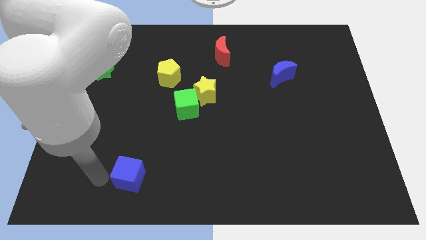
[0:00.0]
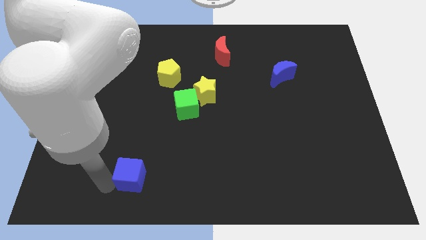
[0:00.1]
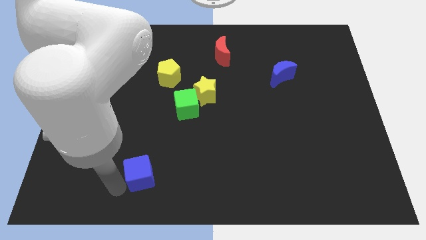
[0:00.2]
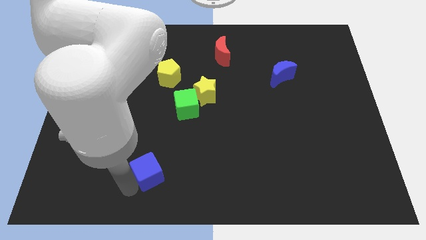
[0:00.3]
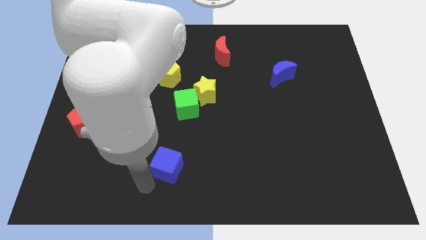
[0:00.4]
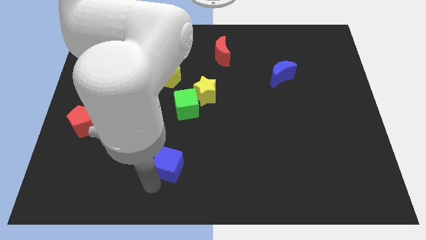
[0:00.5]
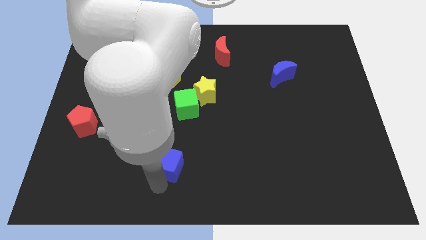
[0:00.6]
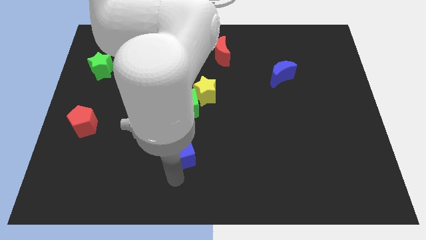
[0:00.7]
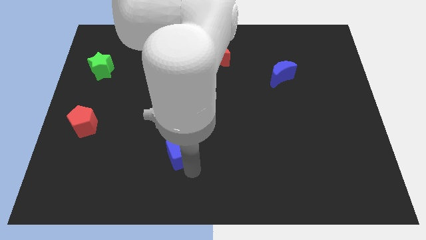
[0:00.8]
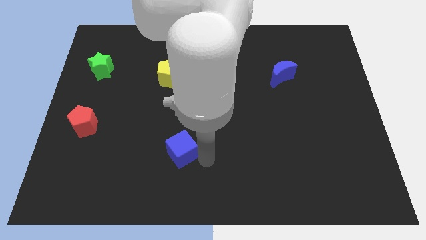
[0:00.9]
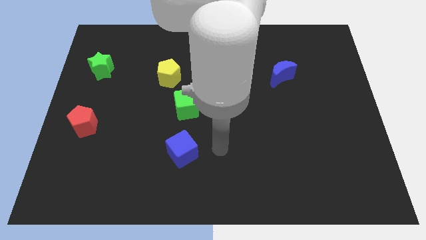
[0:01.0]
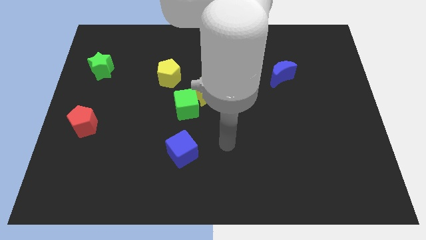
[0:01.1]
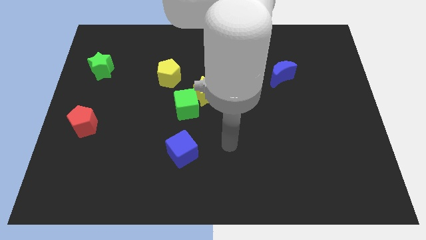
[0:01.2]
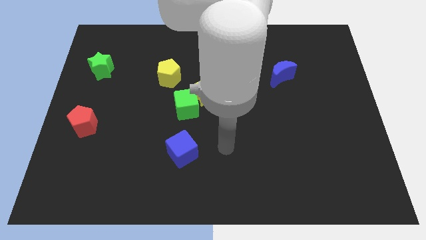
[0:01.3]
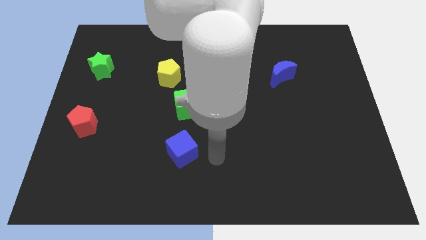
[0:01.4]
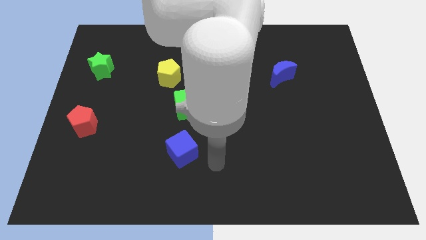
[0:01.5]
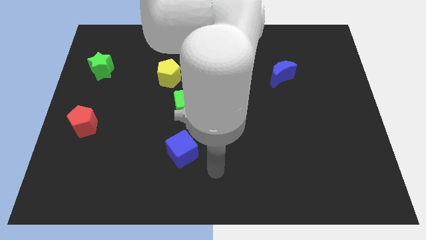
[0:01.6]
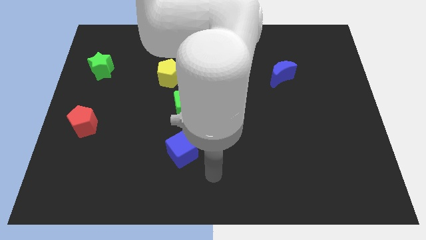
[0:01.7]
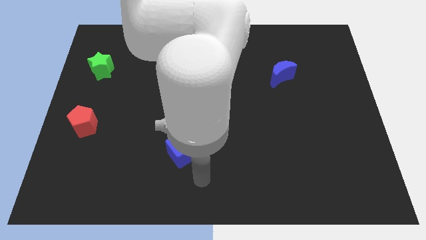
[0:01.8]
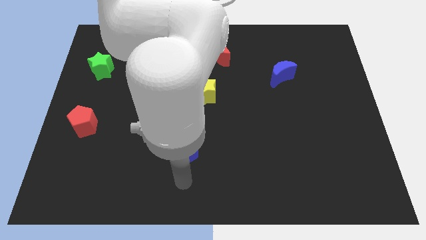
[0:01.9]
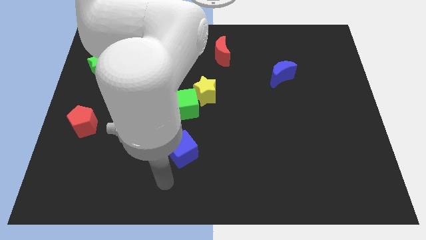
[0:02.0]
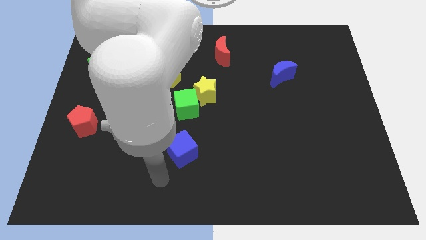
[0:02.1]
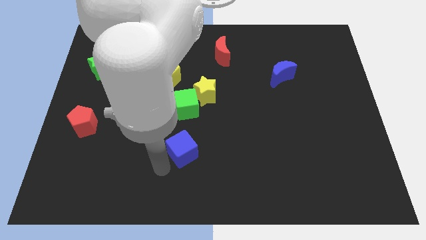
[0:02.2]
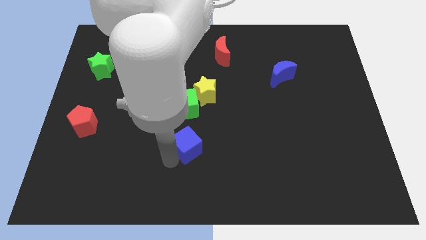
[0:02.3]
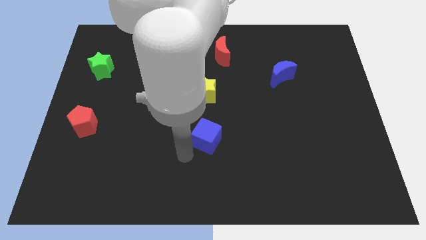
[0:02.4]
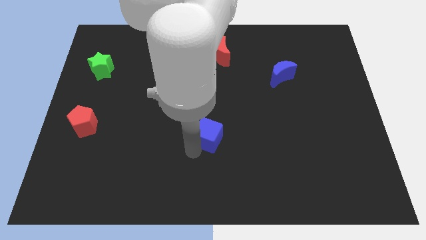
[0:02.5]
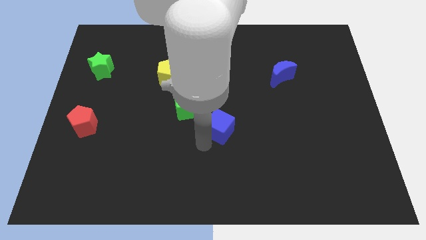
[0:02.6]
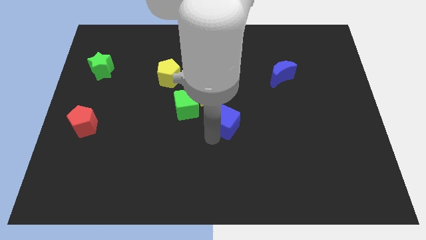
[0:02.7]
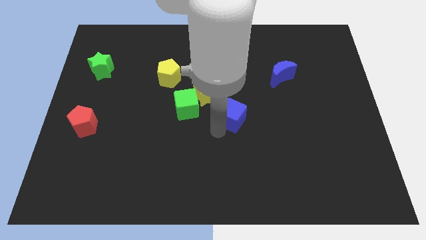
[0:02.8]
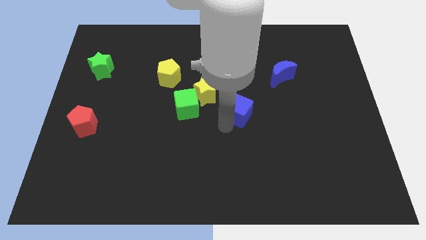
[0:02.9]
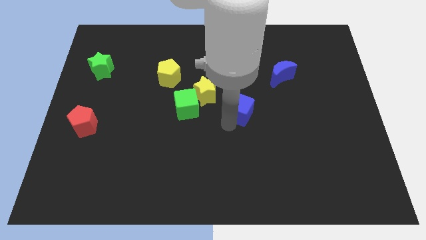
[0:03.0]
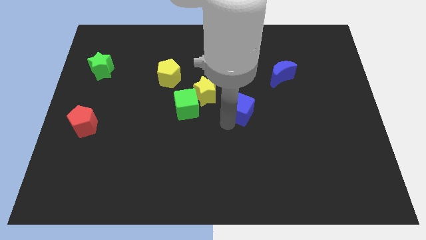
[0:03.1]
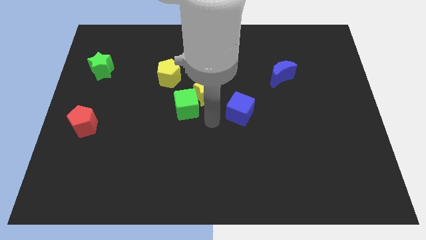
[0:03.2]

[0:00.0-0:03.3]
move blue cube towards the blue moon

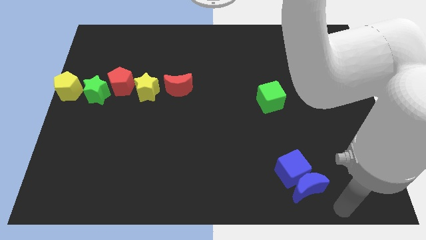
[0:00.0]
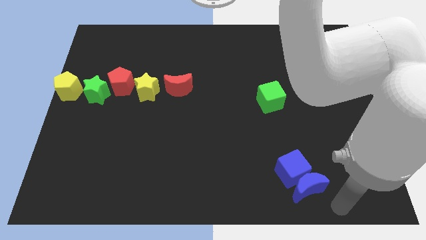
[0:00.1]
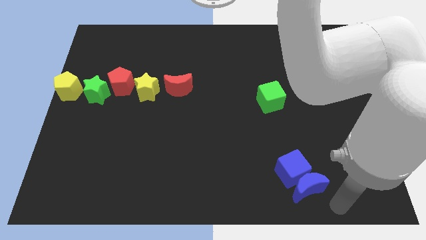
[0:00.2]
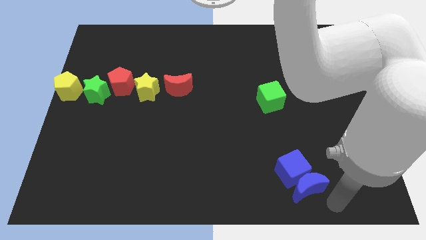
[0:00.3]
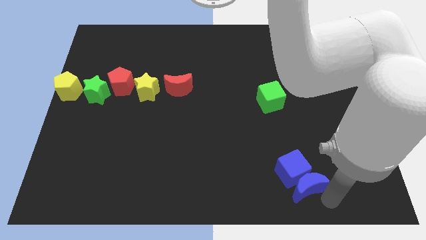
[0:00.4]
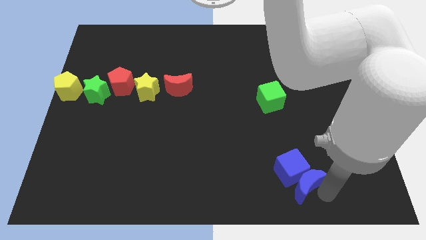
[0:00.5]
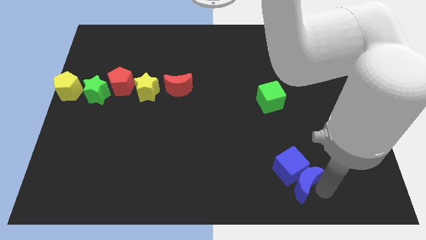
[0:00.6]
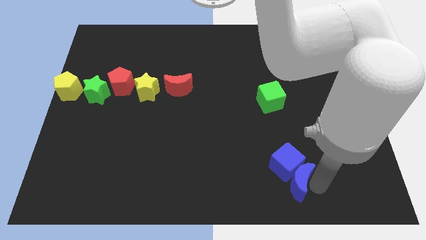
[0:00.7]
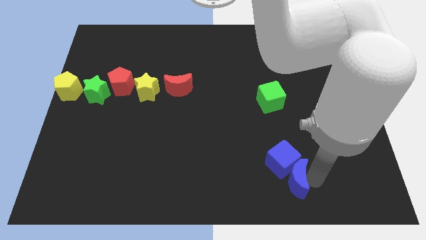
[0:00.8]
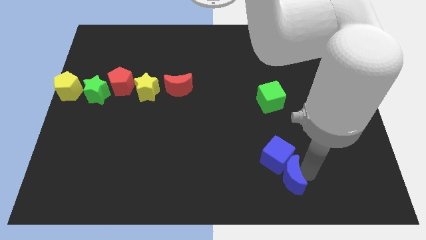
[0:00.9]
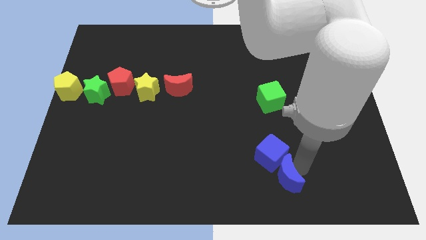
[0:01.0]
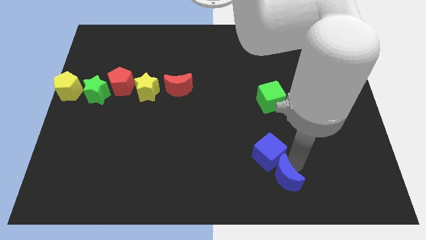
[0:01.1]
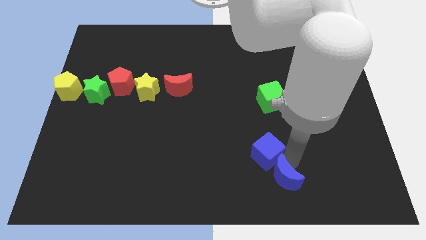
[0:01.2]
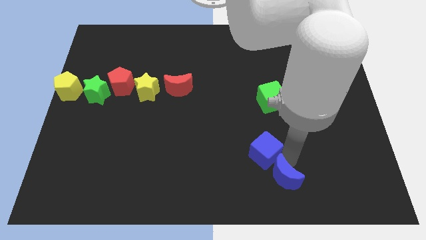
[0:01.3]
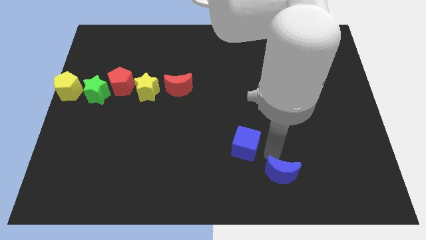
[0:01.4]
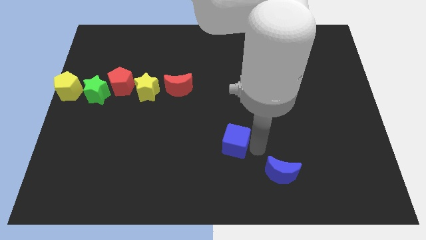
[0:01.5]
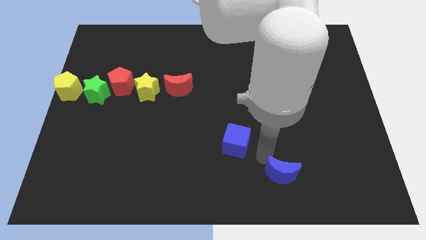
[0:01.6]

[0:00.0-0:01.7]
separate the blue cube and blue crescent

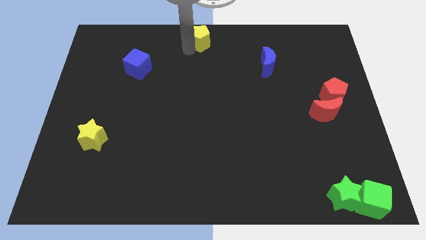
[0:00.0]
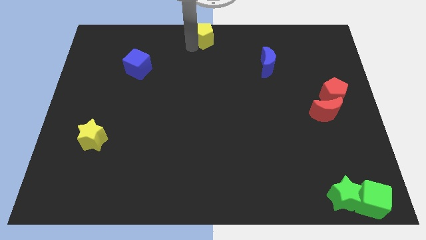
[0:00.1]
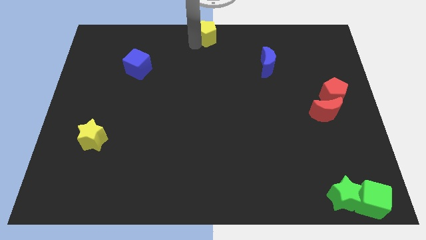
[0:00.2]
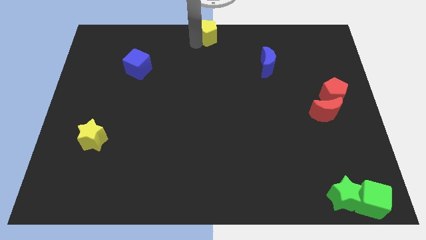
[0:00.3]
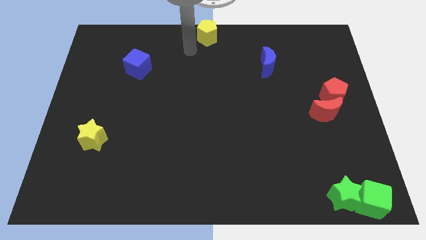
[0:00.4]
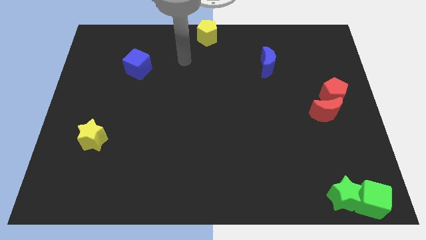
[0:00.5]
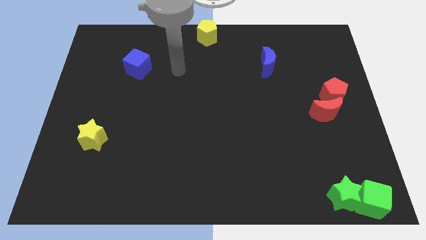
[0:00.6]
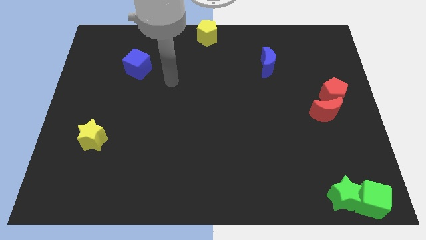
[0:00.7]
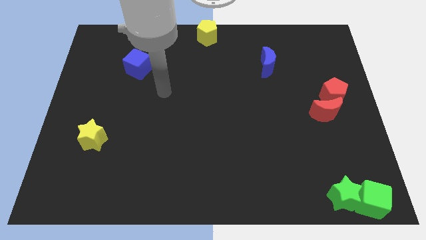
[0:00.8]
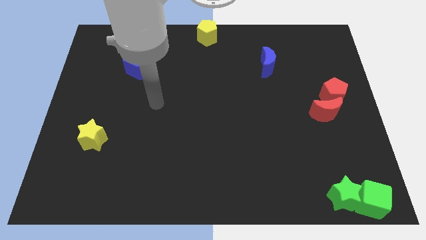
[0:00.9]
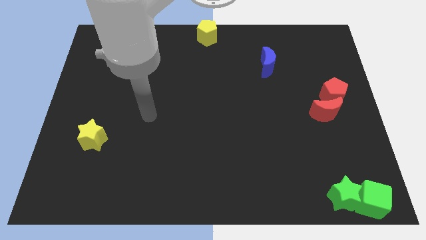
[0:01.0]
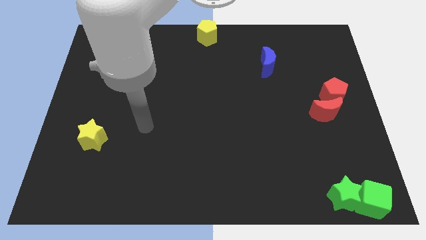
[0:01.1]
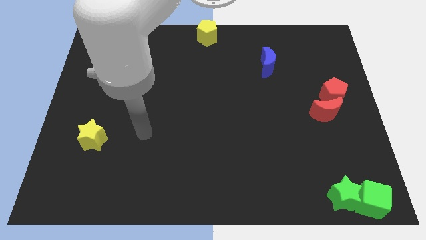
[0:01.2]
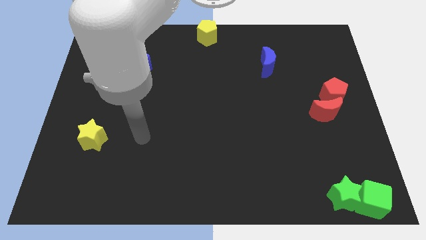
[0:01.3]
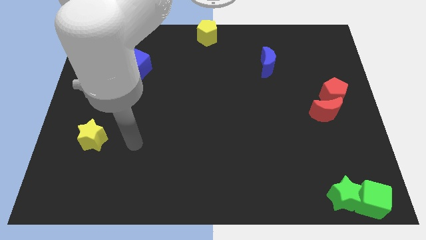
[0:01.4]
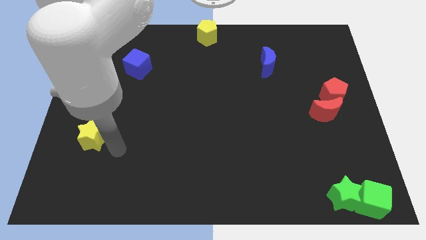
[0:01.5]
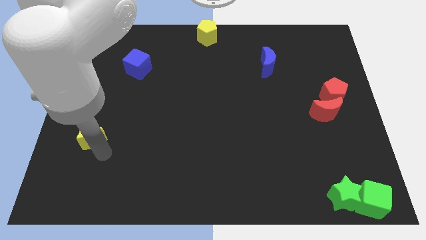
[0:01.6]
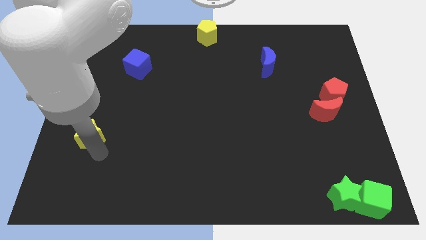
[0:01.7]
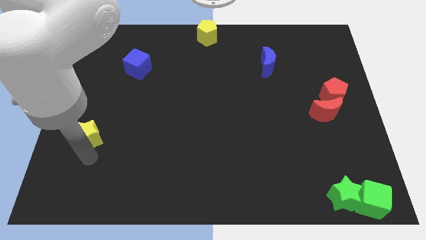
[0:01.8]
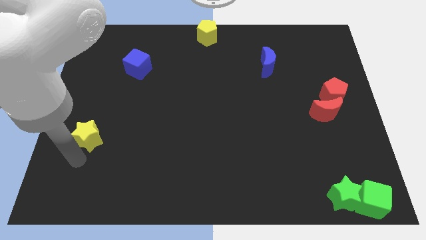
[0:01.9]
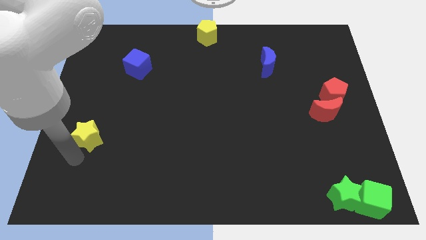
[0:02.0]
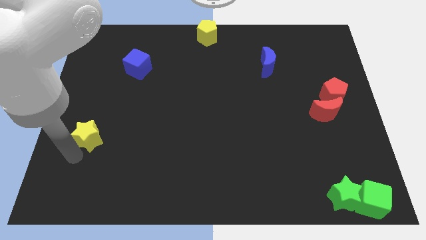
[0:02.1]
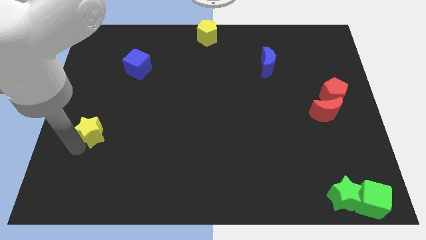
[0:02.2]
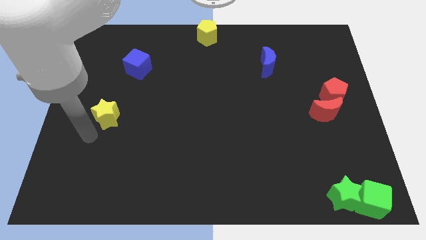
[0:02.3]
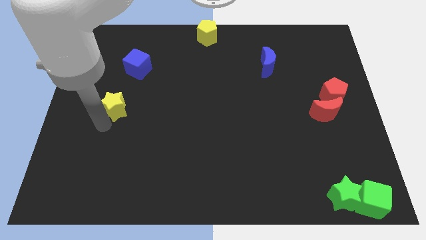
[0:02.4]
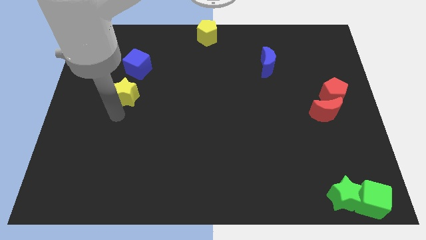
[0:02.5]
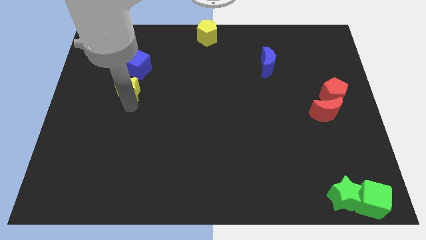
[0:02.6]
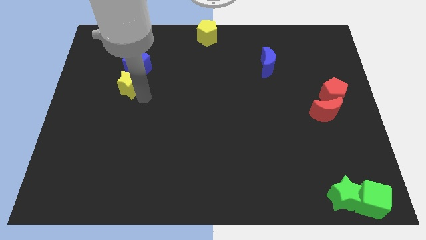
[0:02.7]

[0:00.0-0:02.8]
place the yellow star down to the blue cube

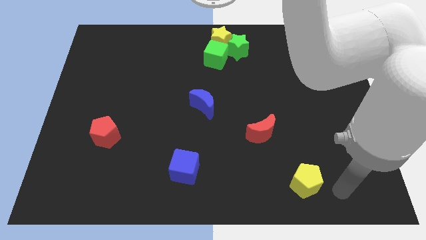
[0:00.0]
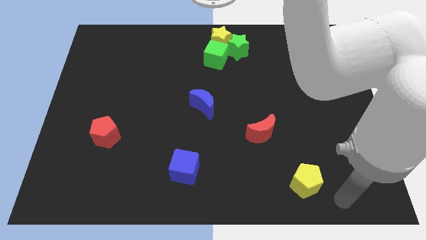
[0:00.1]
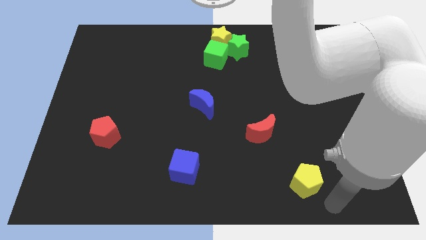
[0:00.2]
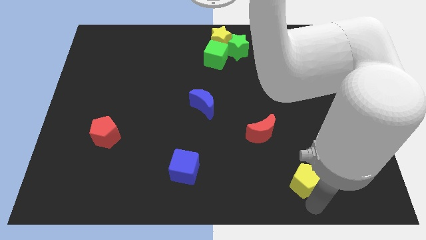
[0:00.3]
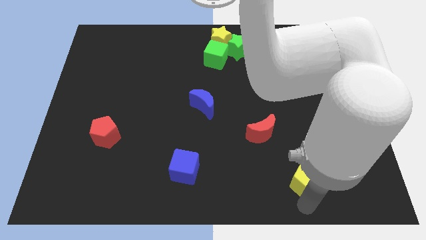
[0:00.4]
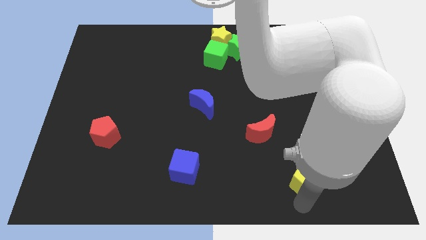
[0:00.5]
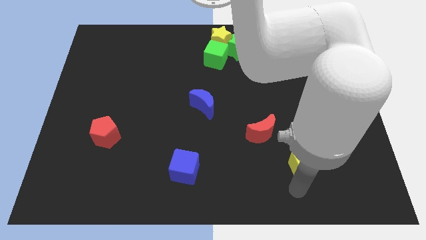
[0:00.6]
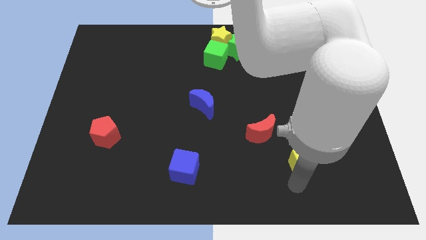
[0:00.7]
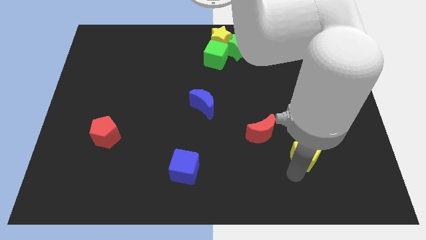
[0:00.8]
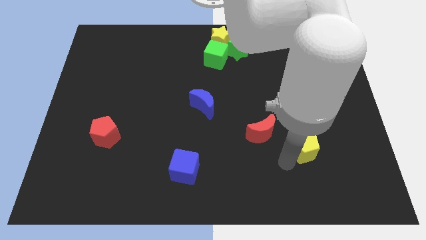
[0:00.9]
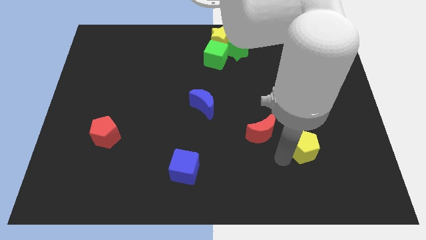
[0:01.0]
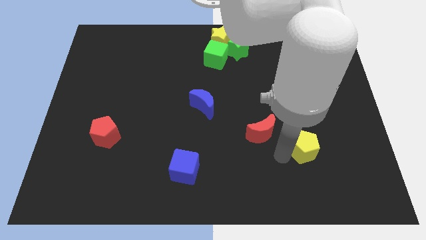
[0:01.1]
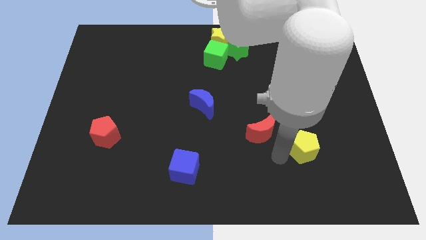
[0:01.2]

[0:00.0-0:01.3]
drag the yellow pentagon upwards
